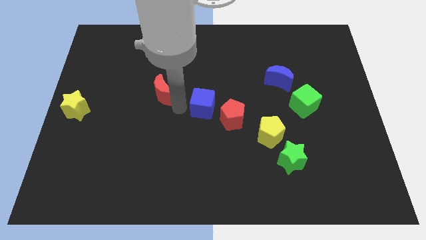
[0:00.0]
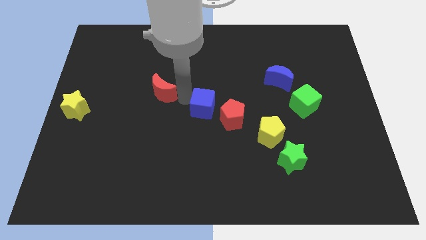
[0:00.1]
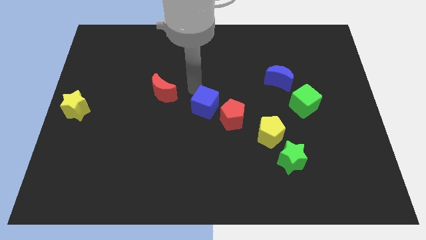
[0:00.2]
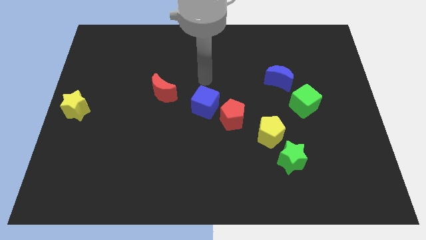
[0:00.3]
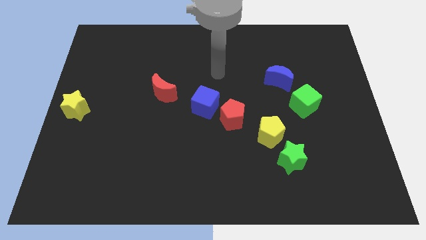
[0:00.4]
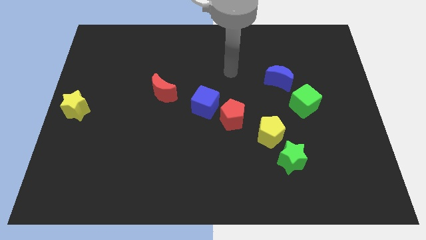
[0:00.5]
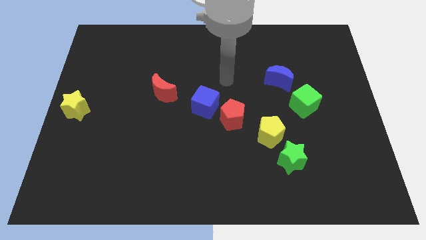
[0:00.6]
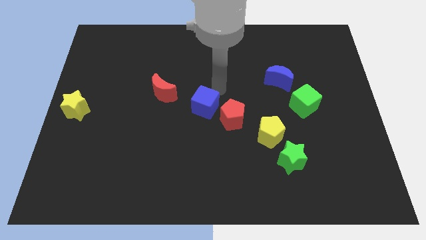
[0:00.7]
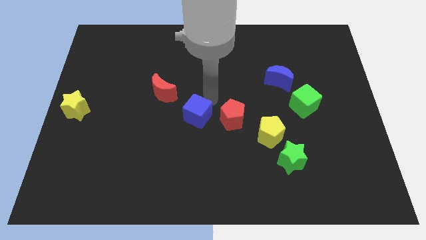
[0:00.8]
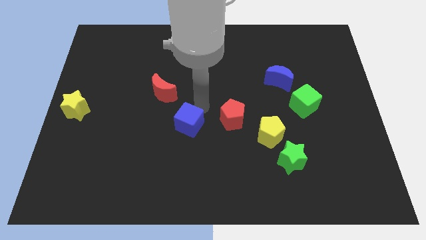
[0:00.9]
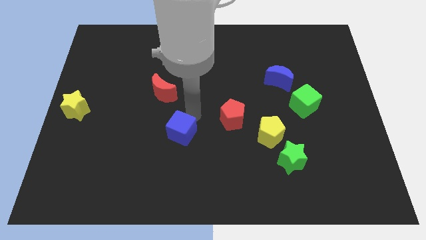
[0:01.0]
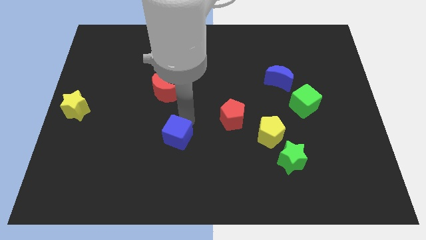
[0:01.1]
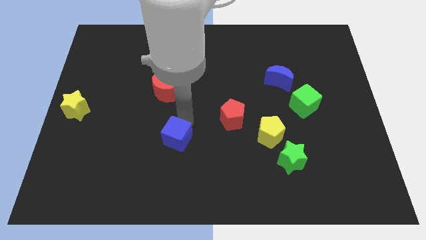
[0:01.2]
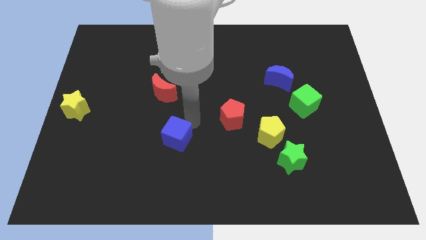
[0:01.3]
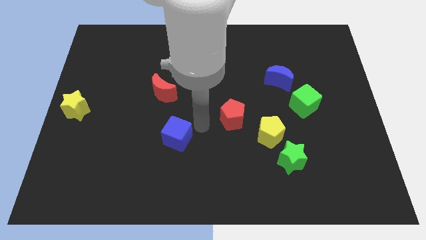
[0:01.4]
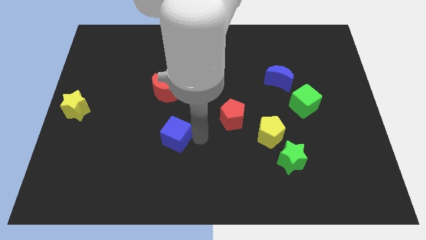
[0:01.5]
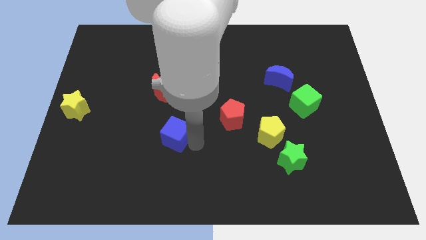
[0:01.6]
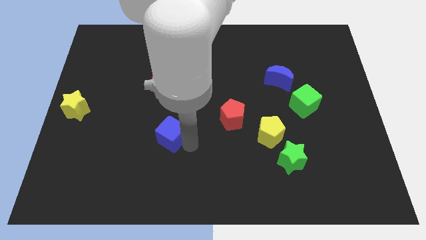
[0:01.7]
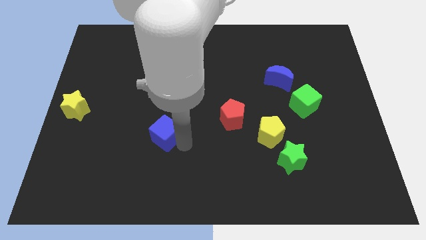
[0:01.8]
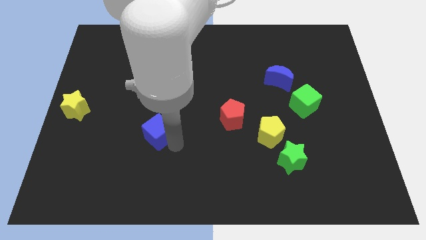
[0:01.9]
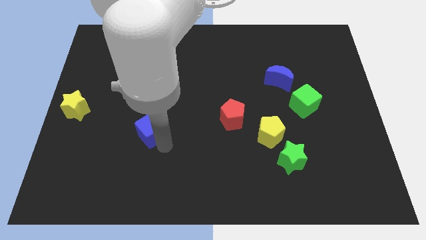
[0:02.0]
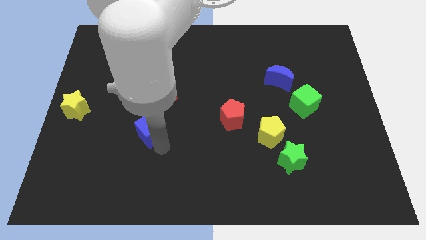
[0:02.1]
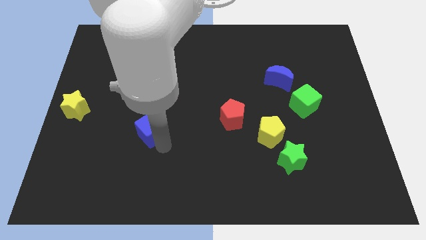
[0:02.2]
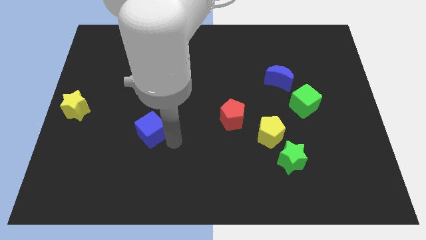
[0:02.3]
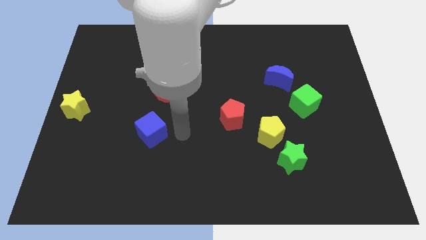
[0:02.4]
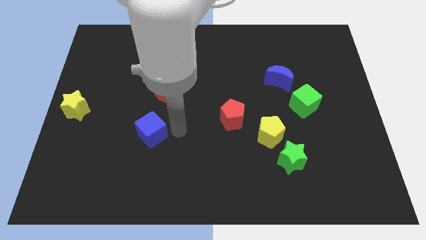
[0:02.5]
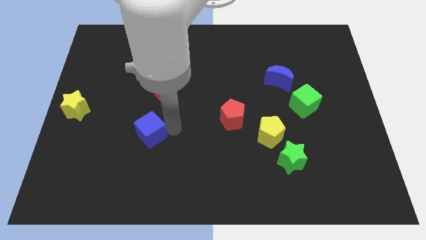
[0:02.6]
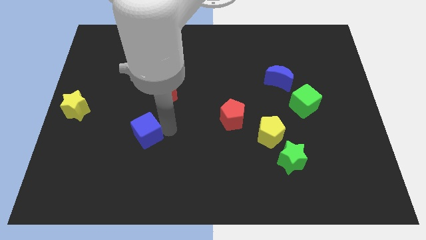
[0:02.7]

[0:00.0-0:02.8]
drag the blue cube downwards

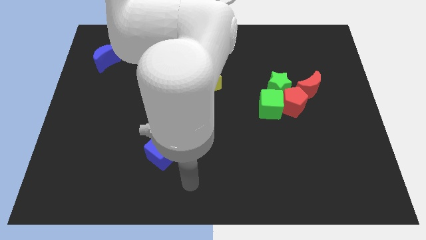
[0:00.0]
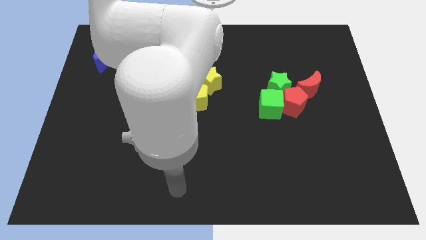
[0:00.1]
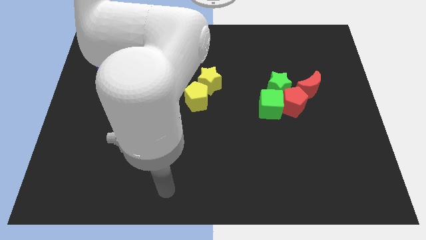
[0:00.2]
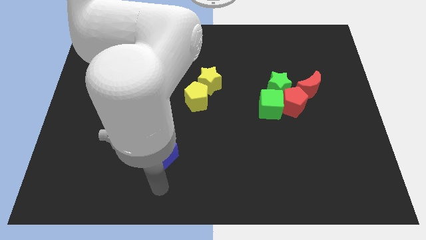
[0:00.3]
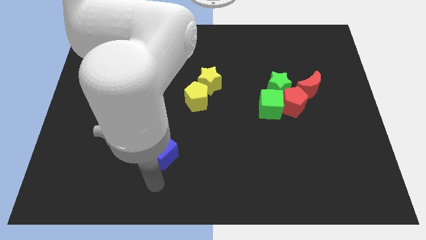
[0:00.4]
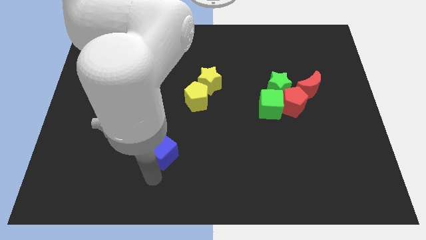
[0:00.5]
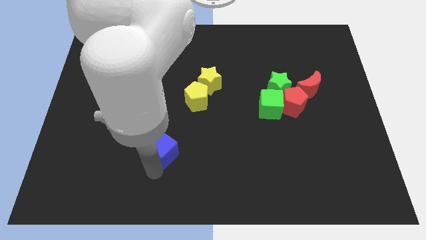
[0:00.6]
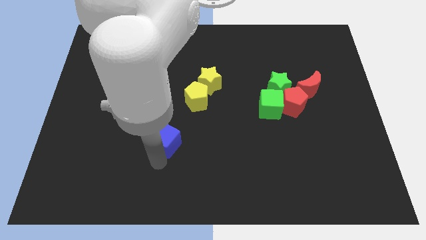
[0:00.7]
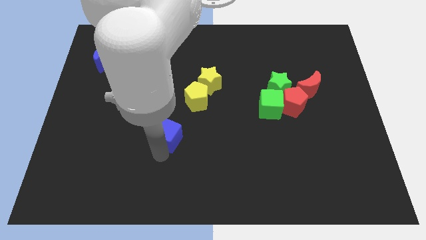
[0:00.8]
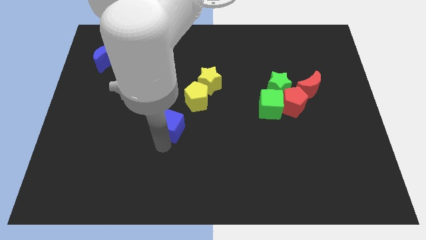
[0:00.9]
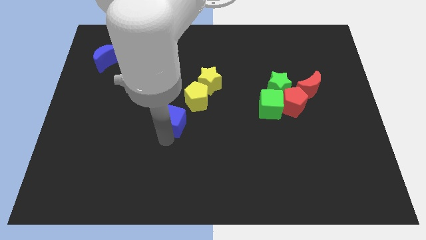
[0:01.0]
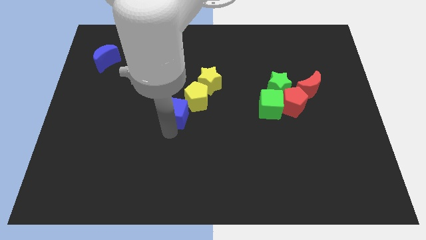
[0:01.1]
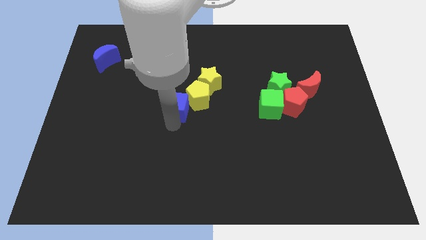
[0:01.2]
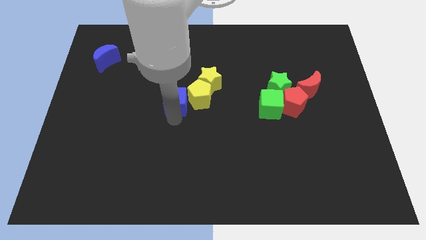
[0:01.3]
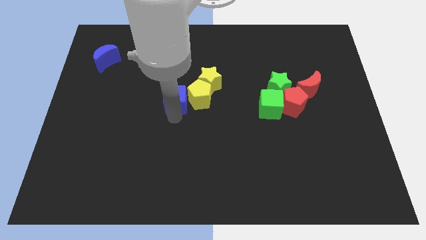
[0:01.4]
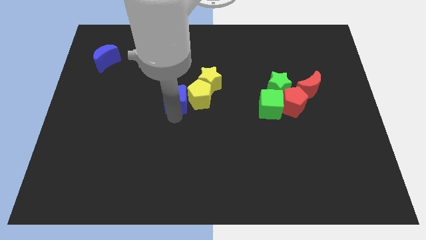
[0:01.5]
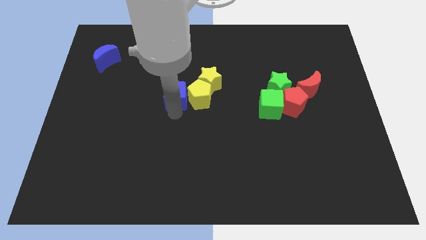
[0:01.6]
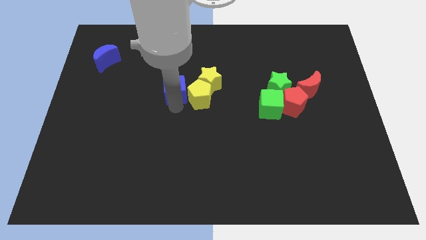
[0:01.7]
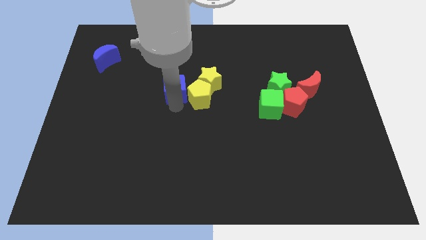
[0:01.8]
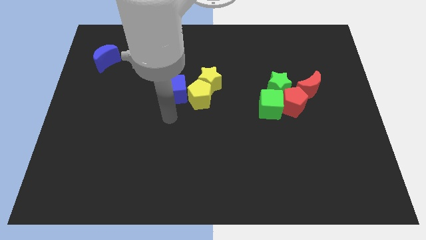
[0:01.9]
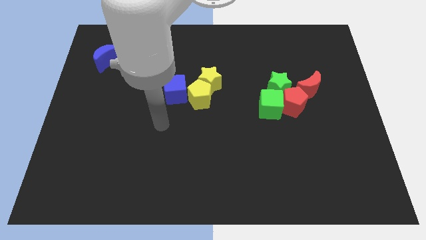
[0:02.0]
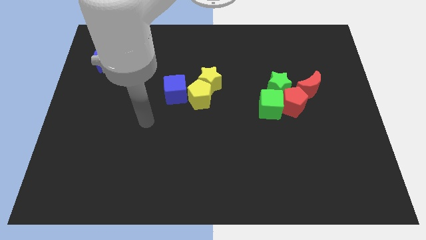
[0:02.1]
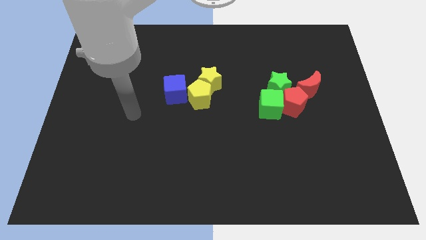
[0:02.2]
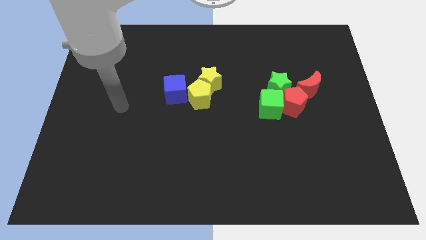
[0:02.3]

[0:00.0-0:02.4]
move the blue cube left to the yellow pentagon

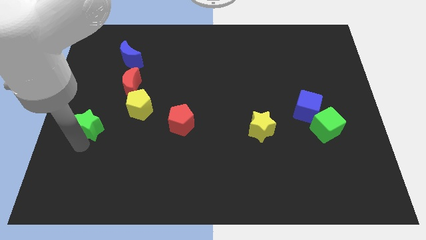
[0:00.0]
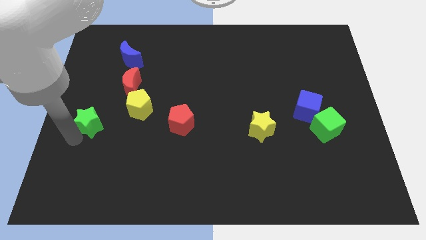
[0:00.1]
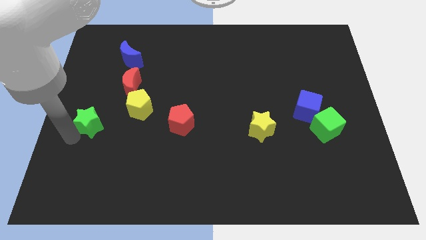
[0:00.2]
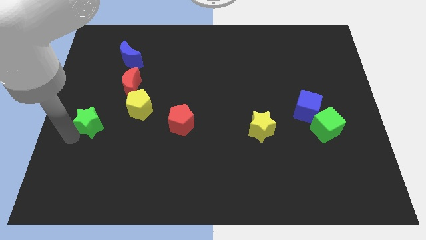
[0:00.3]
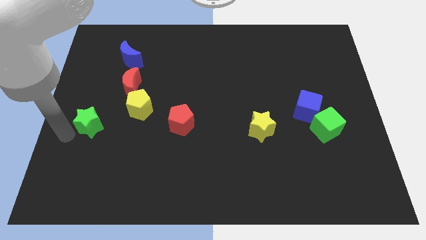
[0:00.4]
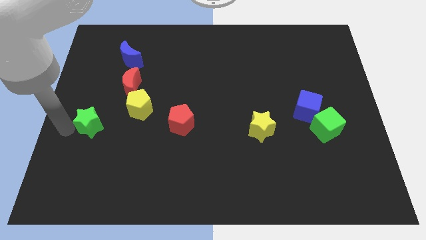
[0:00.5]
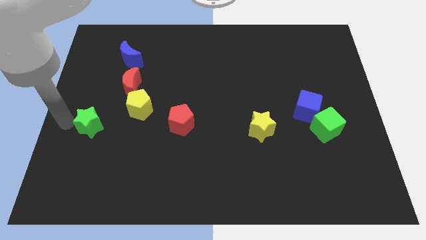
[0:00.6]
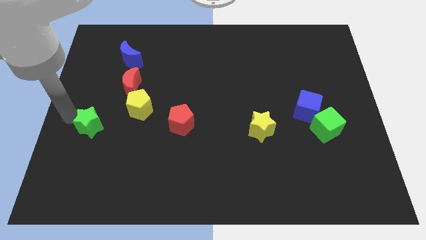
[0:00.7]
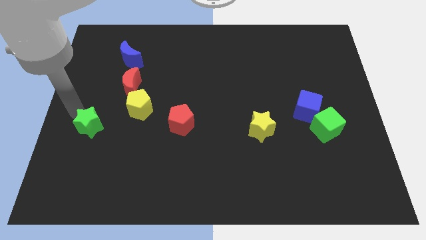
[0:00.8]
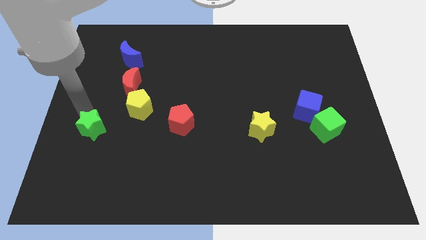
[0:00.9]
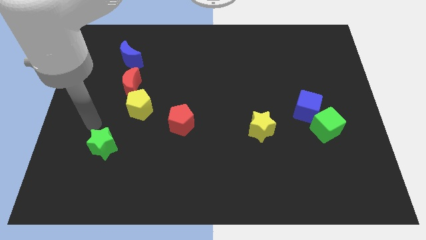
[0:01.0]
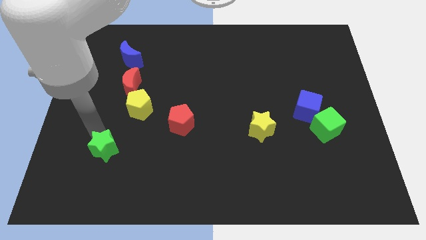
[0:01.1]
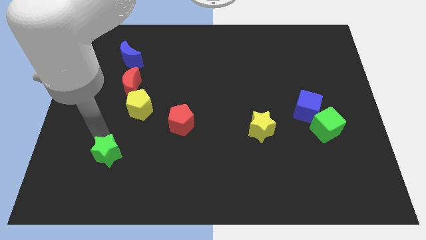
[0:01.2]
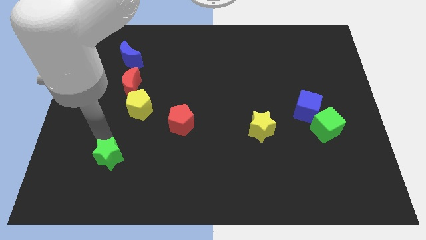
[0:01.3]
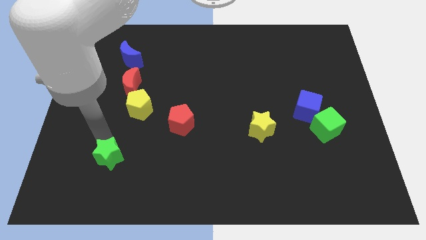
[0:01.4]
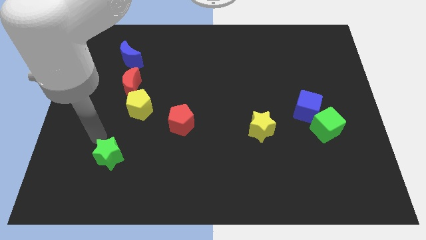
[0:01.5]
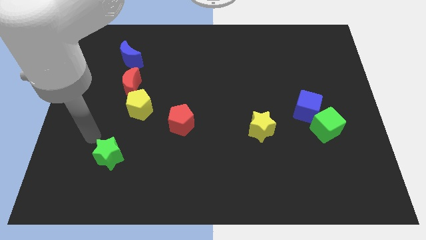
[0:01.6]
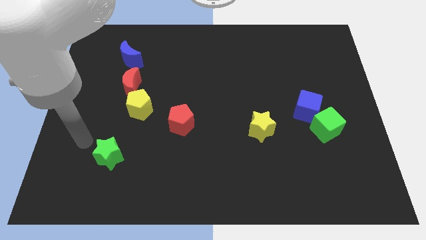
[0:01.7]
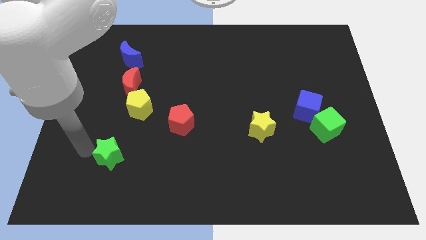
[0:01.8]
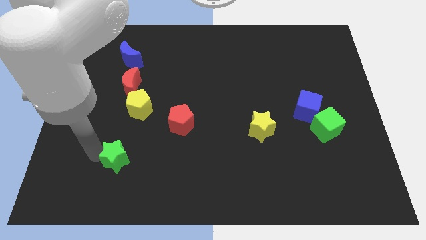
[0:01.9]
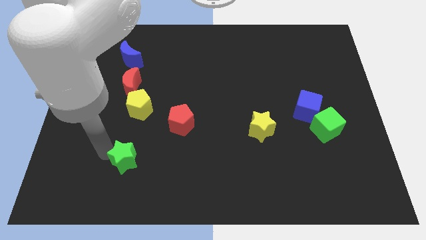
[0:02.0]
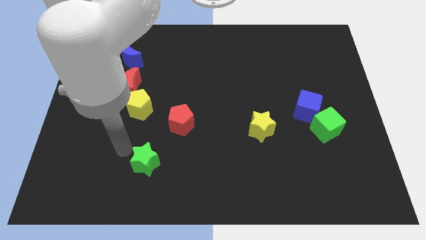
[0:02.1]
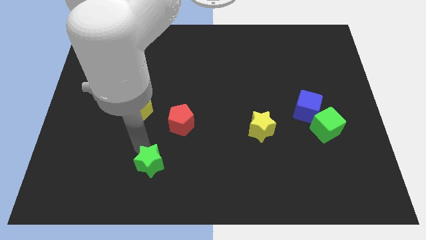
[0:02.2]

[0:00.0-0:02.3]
move green star towards bottom

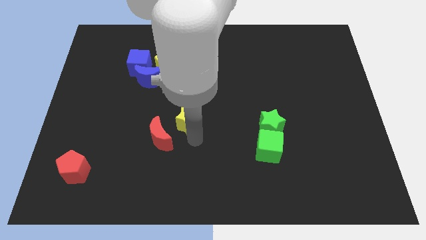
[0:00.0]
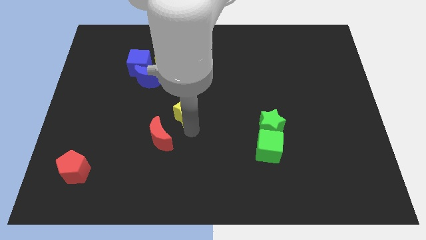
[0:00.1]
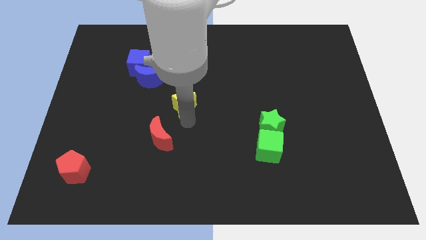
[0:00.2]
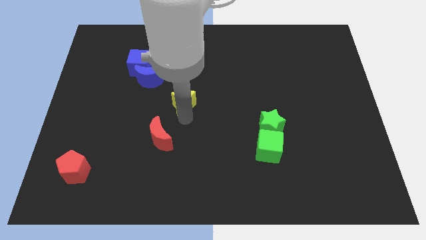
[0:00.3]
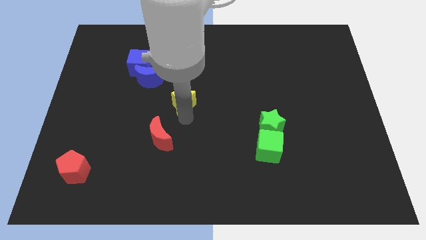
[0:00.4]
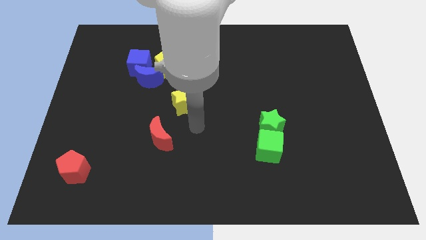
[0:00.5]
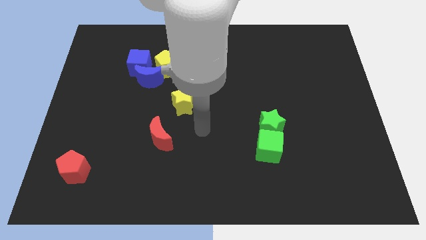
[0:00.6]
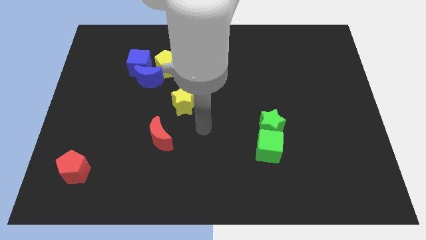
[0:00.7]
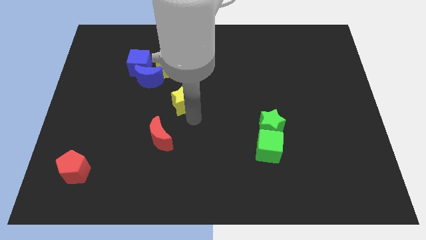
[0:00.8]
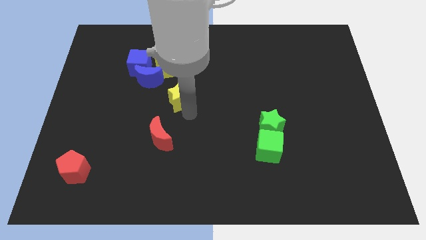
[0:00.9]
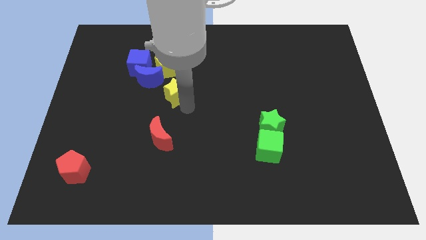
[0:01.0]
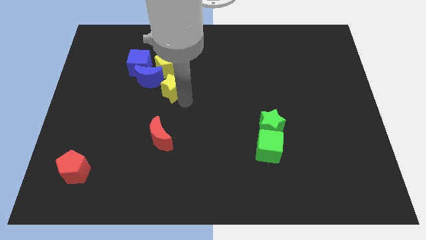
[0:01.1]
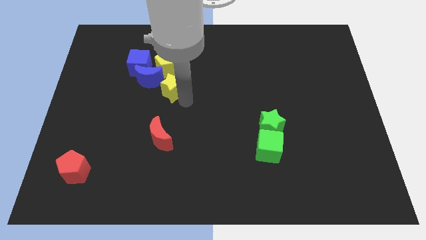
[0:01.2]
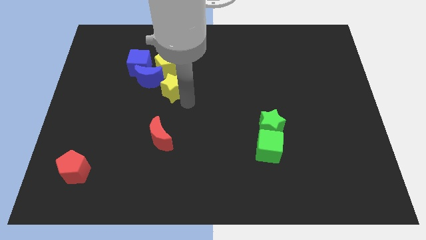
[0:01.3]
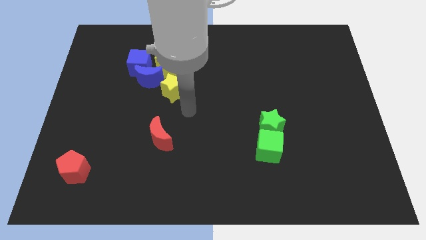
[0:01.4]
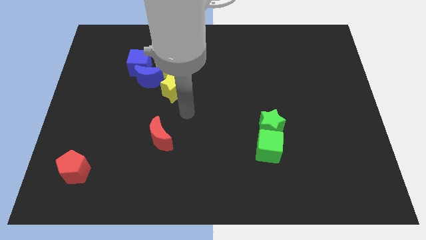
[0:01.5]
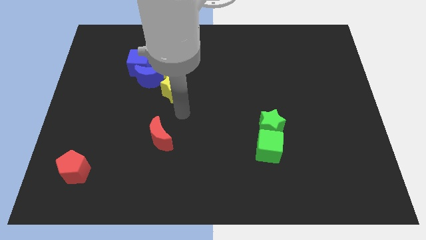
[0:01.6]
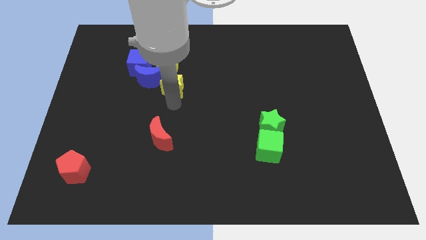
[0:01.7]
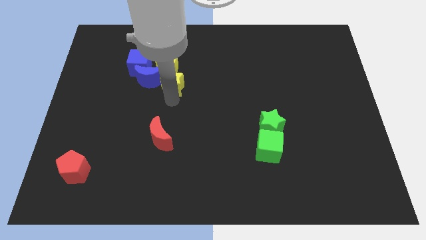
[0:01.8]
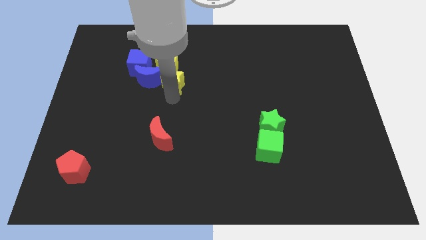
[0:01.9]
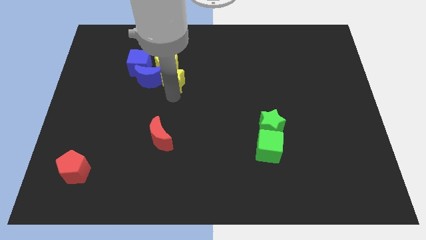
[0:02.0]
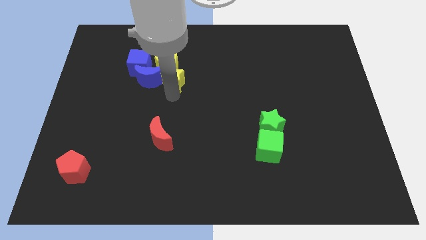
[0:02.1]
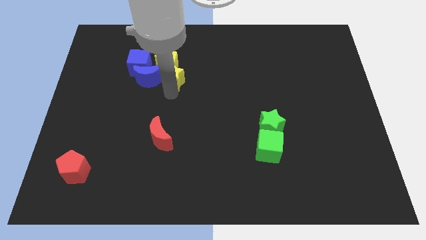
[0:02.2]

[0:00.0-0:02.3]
push the yellow star into the yellow pentagon
